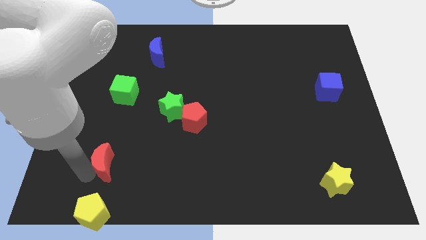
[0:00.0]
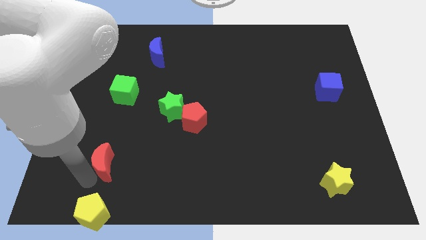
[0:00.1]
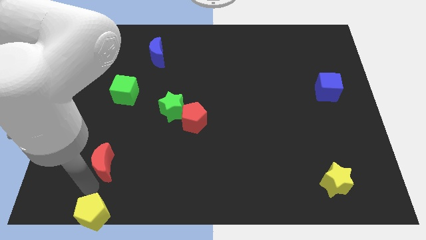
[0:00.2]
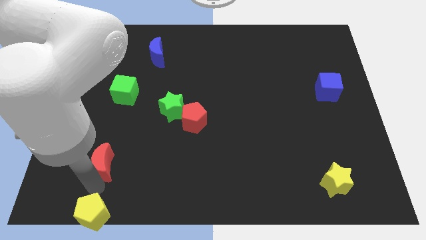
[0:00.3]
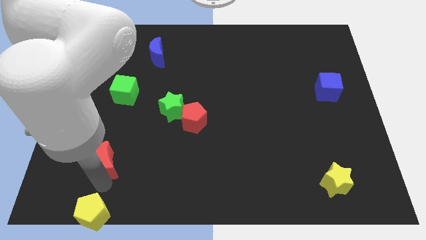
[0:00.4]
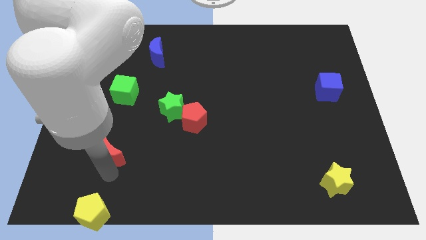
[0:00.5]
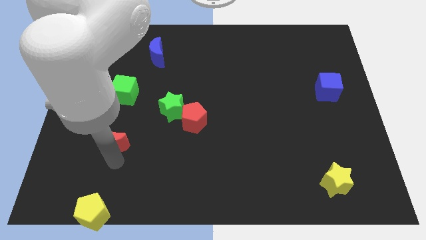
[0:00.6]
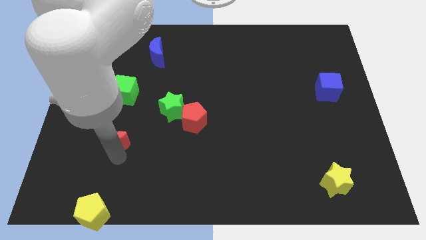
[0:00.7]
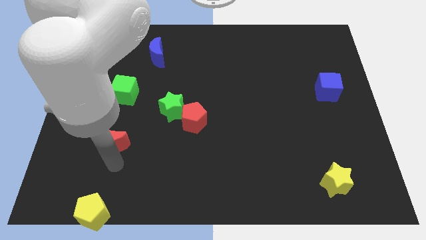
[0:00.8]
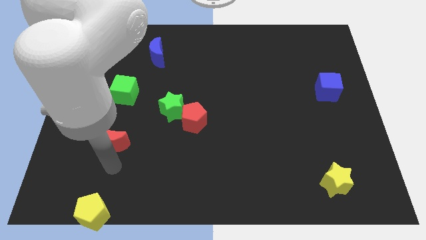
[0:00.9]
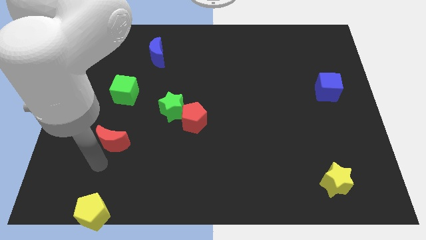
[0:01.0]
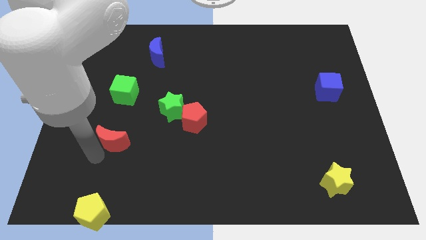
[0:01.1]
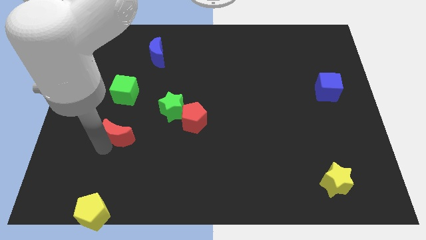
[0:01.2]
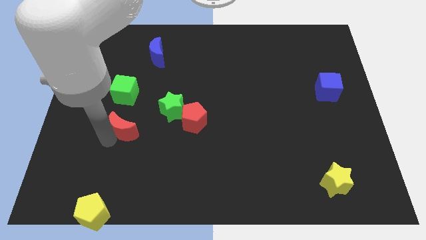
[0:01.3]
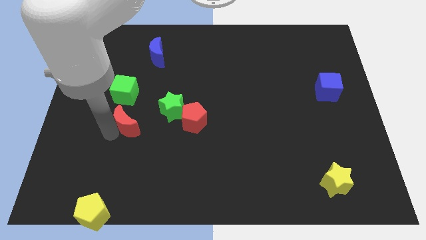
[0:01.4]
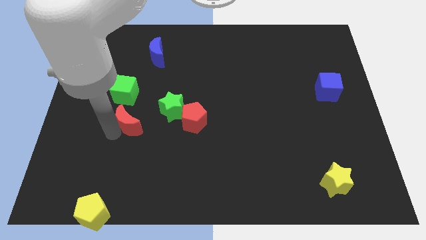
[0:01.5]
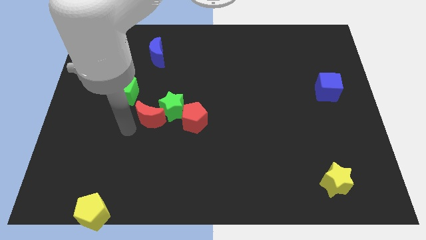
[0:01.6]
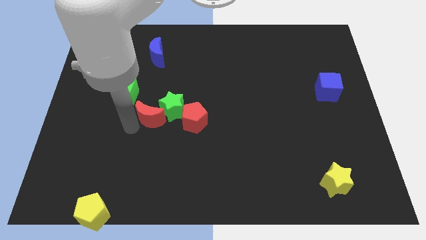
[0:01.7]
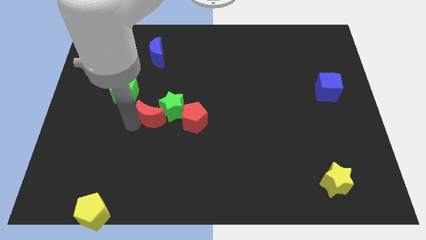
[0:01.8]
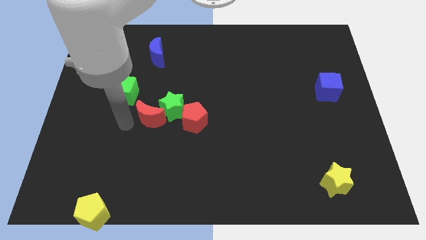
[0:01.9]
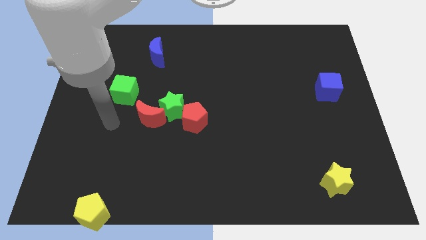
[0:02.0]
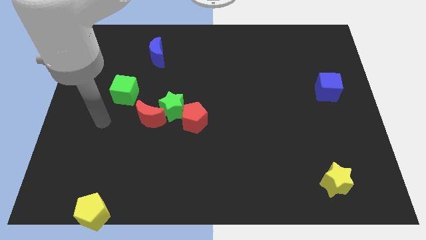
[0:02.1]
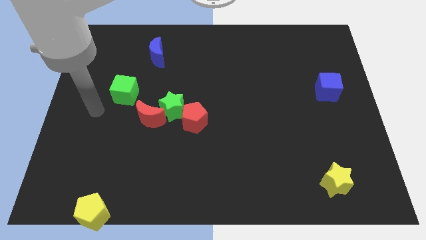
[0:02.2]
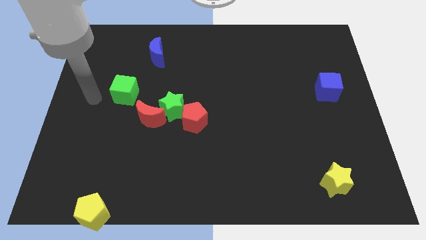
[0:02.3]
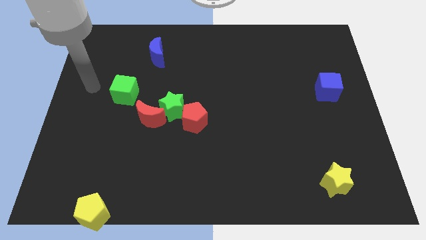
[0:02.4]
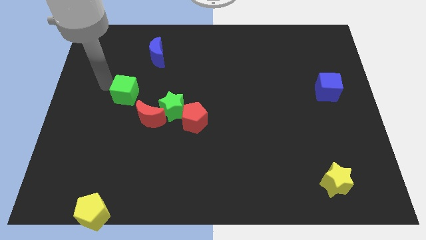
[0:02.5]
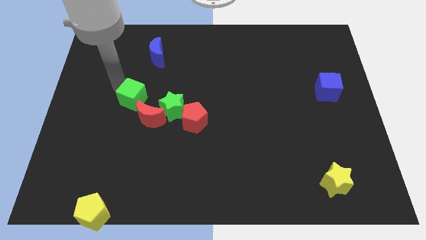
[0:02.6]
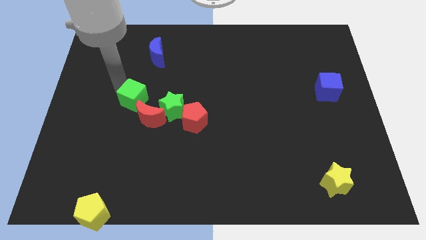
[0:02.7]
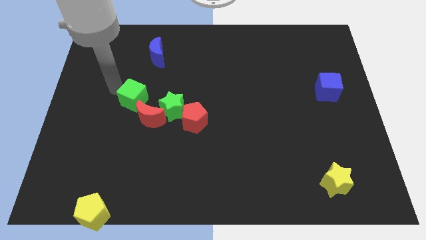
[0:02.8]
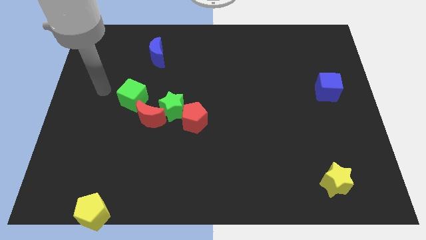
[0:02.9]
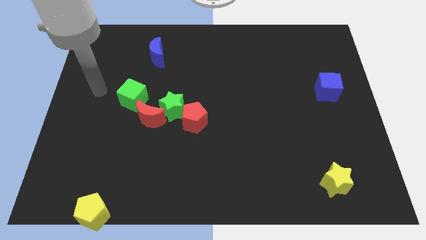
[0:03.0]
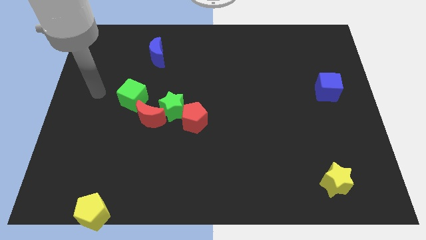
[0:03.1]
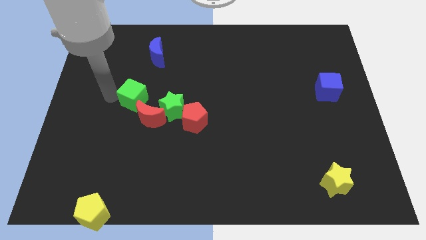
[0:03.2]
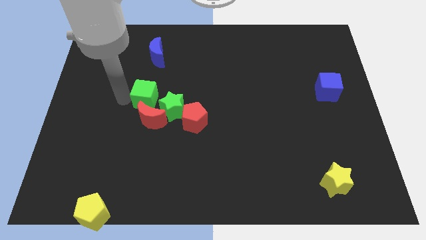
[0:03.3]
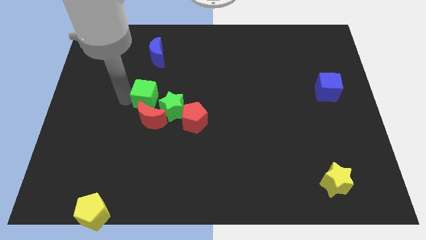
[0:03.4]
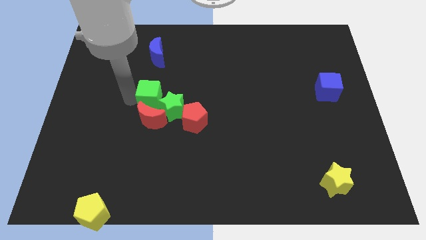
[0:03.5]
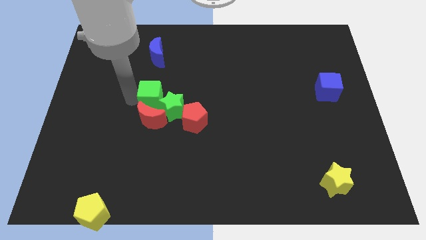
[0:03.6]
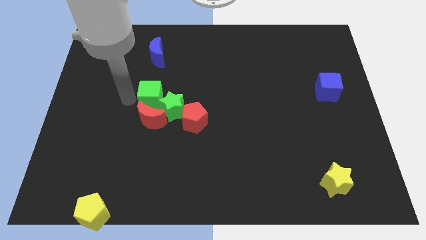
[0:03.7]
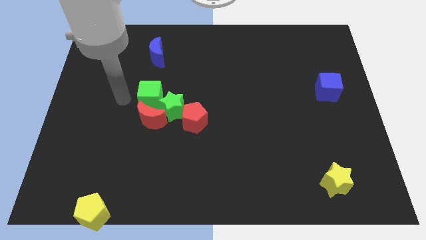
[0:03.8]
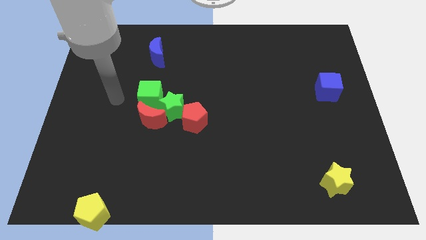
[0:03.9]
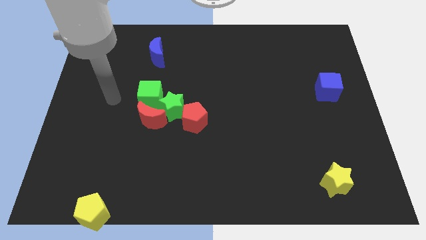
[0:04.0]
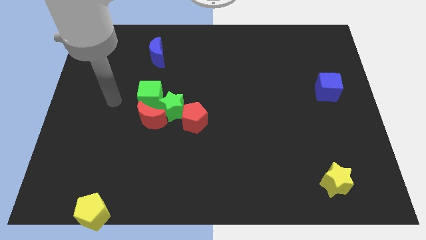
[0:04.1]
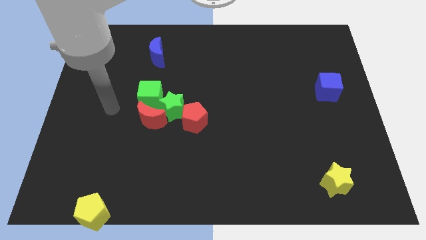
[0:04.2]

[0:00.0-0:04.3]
place the red moon and green cube together

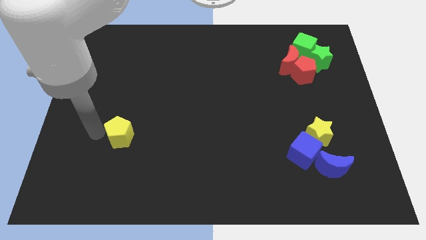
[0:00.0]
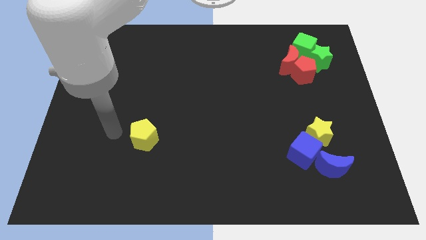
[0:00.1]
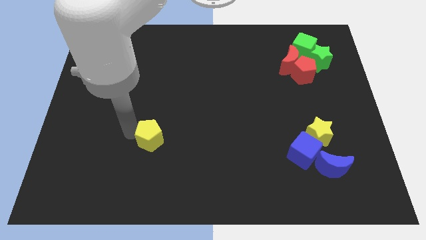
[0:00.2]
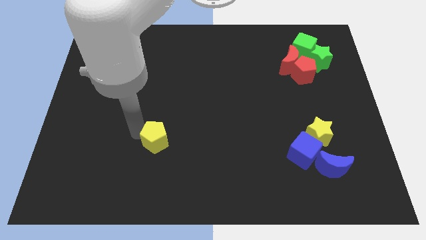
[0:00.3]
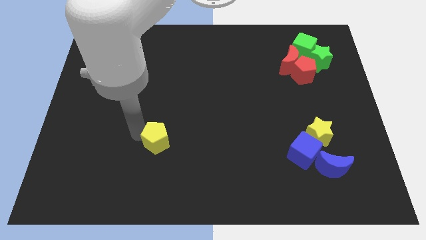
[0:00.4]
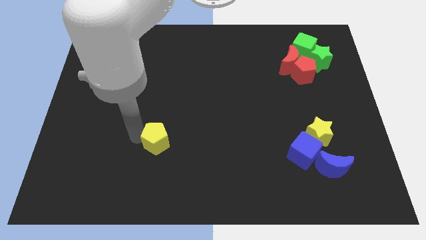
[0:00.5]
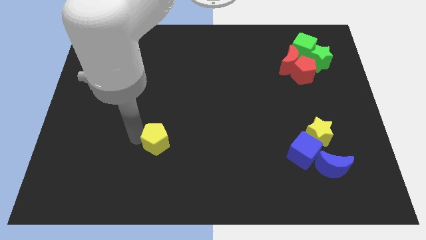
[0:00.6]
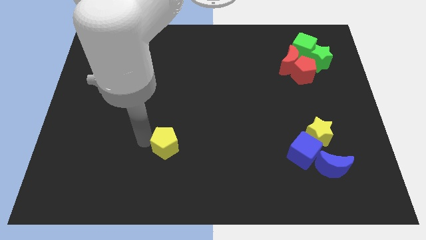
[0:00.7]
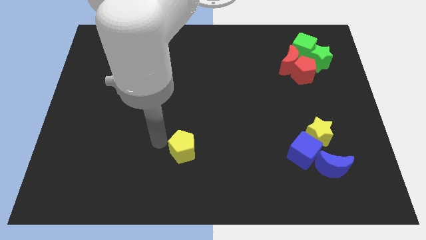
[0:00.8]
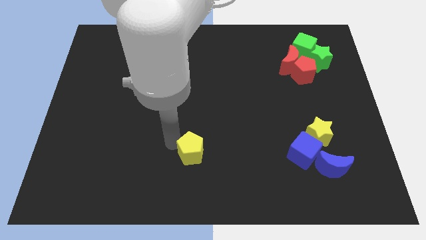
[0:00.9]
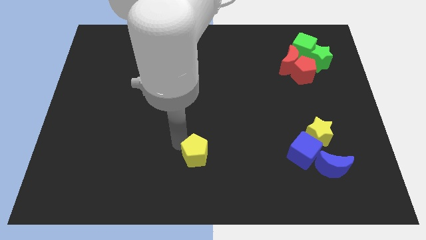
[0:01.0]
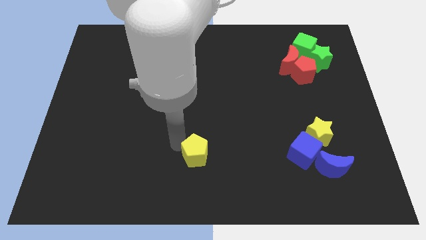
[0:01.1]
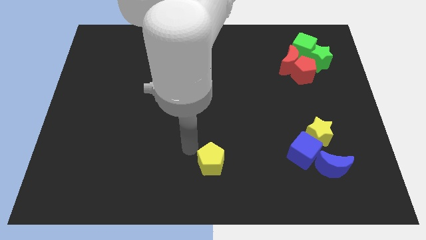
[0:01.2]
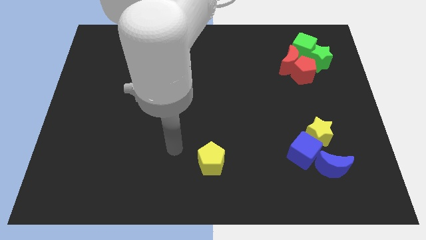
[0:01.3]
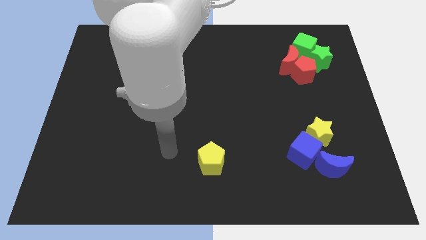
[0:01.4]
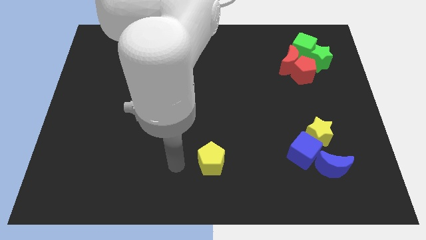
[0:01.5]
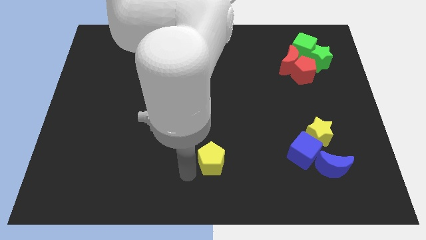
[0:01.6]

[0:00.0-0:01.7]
move the yellow pentagon to the bottom center of the board

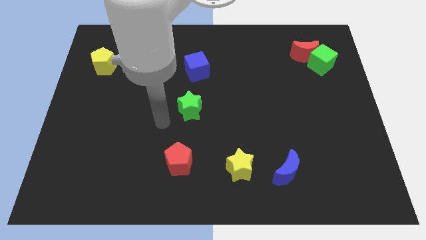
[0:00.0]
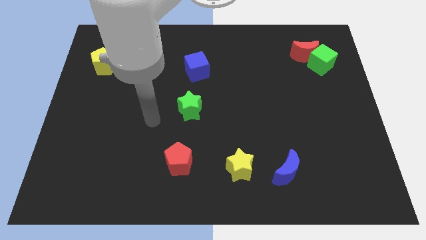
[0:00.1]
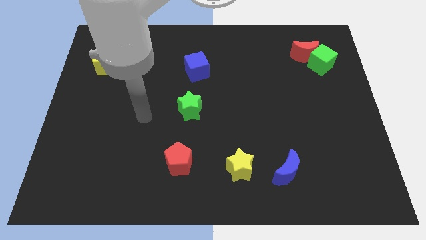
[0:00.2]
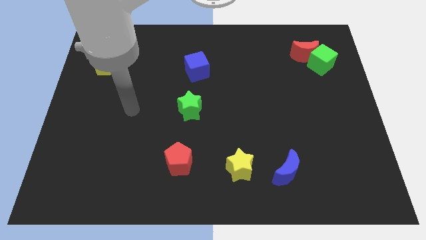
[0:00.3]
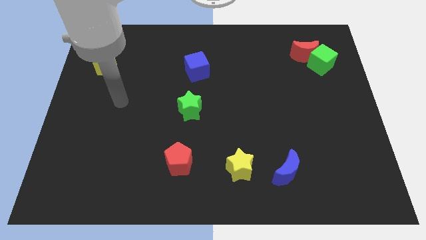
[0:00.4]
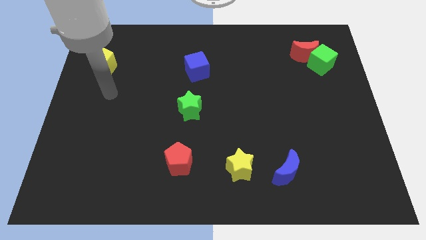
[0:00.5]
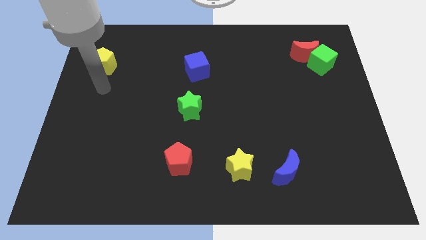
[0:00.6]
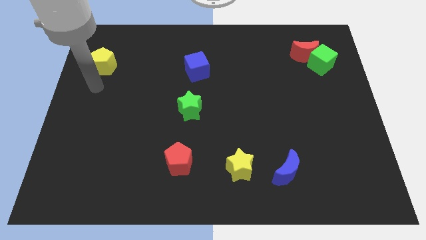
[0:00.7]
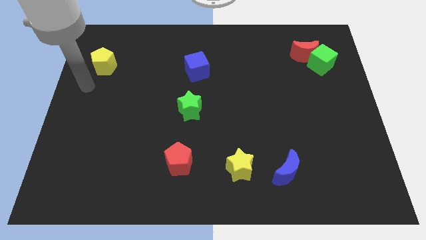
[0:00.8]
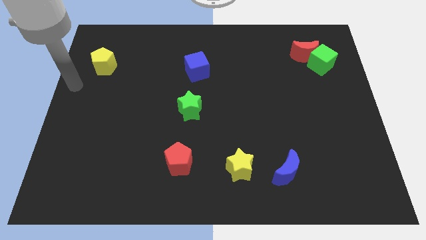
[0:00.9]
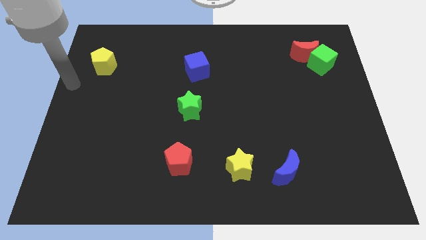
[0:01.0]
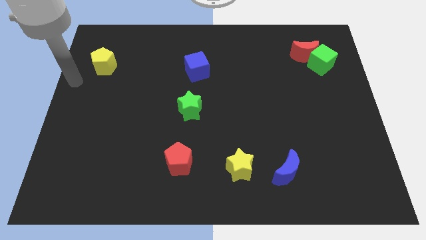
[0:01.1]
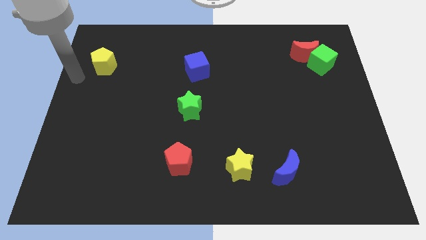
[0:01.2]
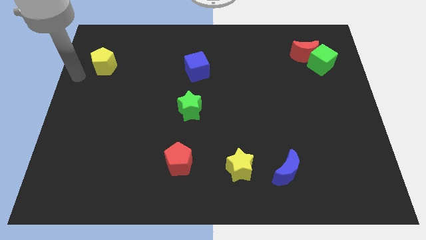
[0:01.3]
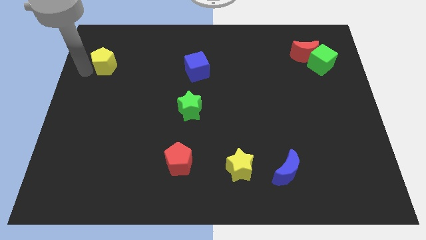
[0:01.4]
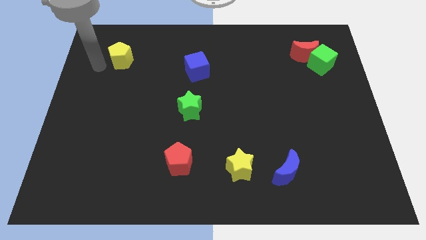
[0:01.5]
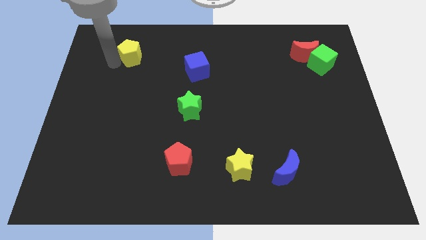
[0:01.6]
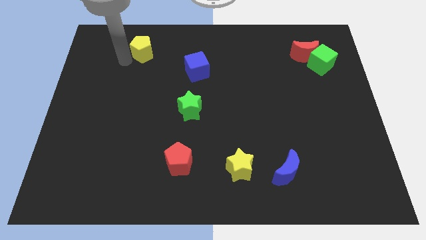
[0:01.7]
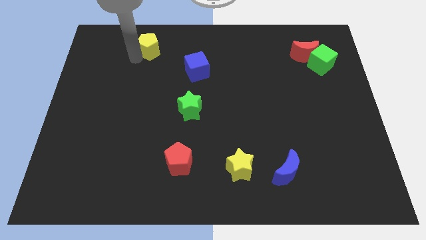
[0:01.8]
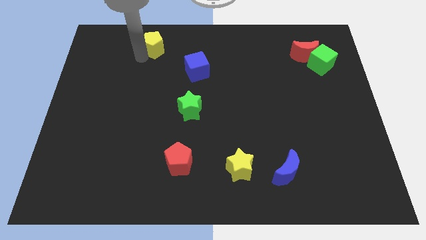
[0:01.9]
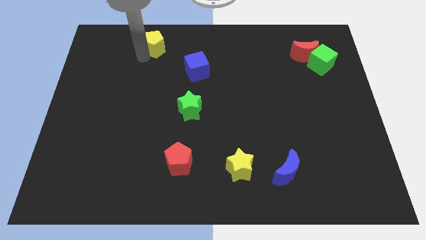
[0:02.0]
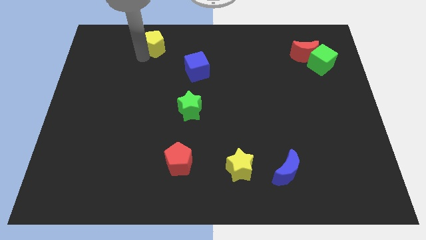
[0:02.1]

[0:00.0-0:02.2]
move the yellow pentagon diagonally to the left of blue cube

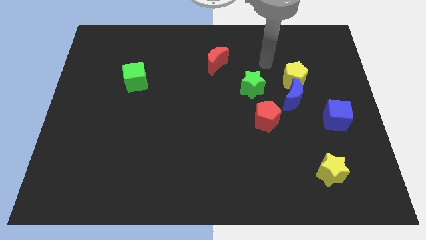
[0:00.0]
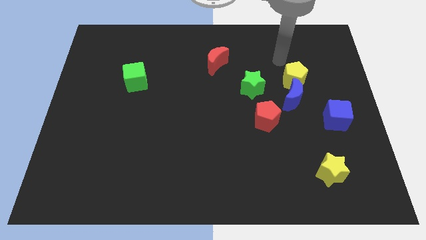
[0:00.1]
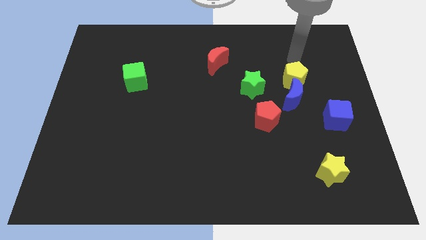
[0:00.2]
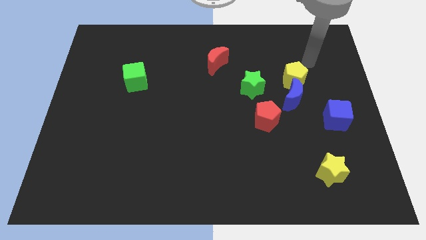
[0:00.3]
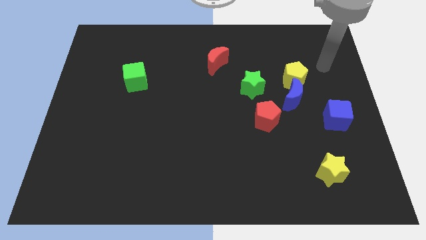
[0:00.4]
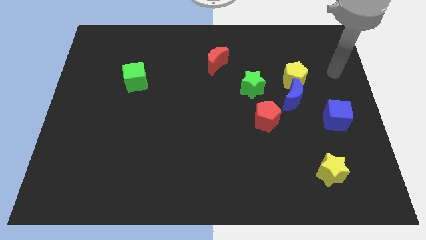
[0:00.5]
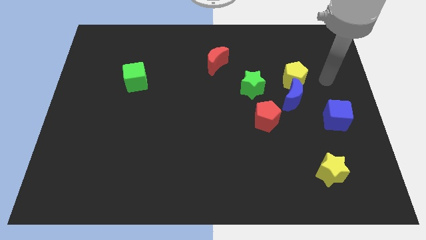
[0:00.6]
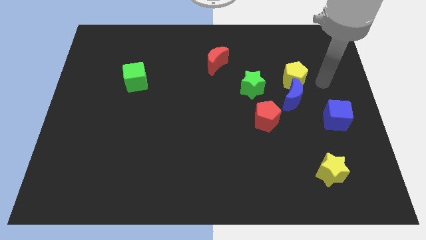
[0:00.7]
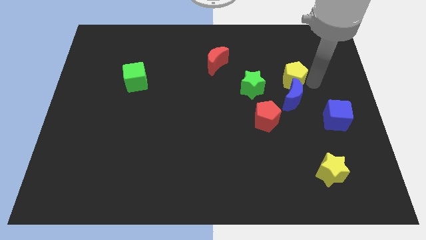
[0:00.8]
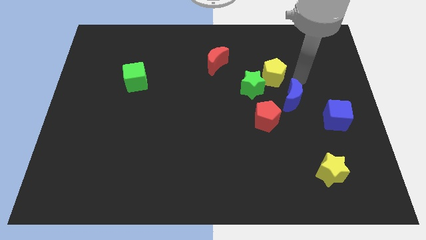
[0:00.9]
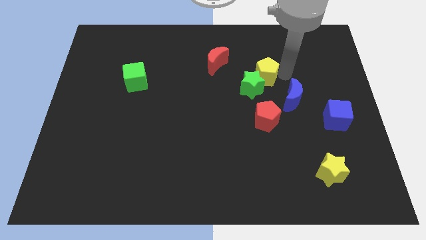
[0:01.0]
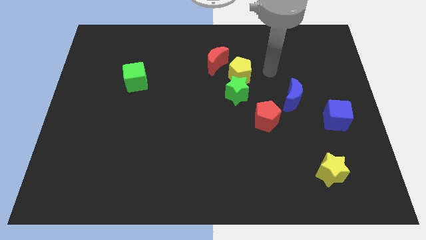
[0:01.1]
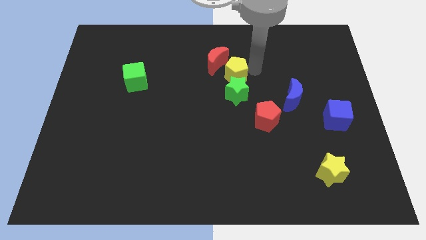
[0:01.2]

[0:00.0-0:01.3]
place the yellow pentagon above the green star
